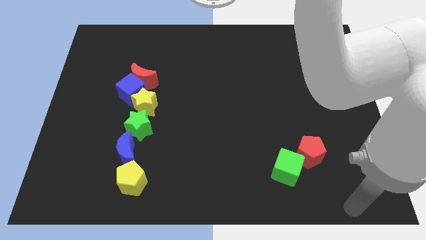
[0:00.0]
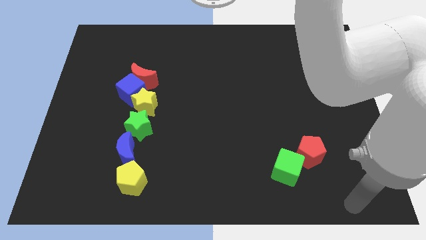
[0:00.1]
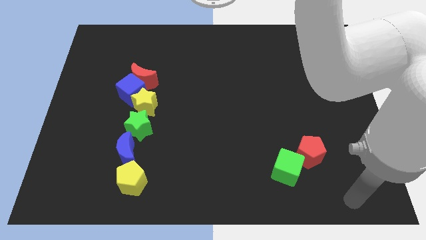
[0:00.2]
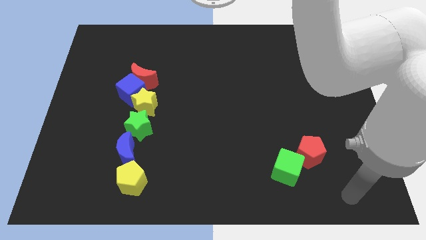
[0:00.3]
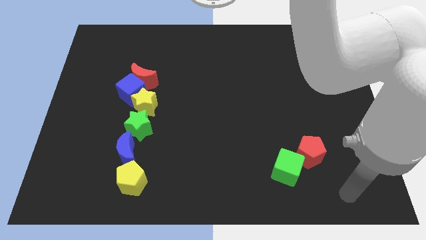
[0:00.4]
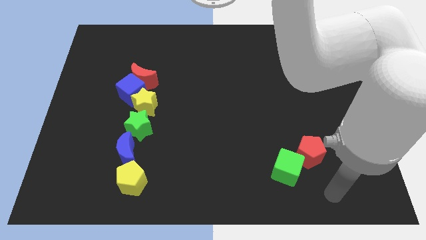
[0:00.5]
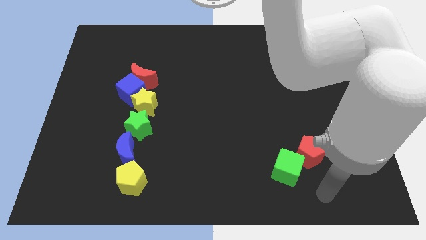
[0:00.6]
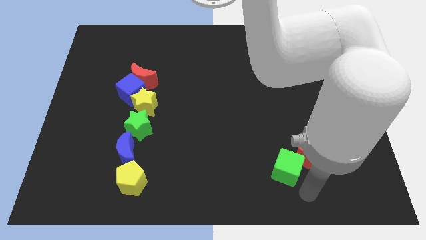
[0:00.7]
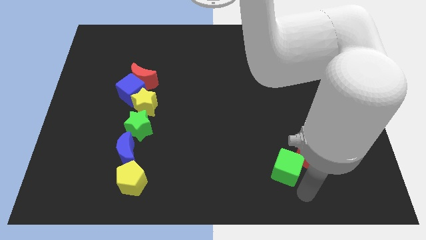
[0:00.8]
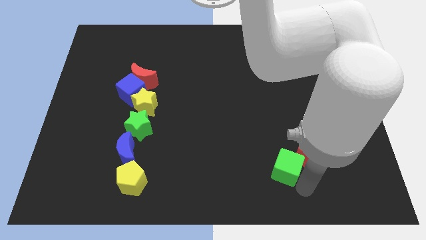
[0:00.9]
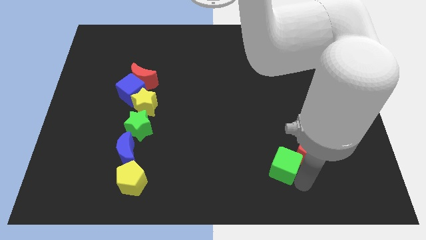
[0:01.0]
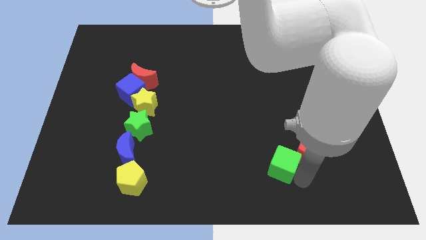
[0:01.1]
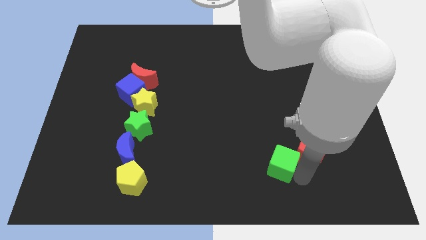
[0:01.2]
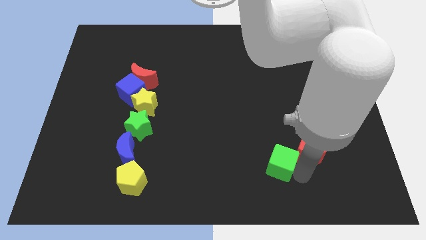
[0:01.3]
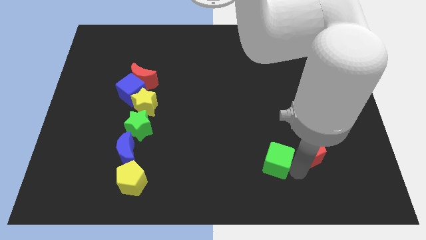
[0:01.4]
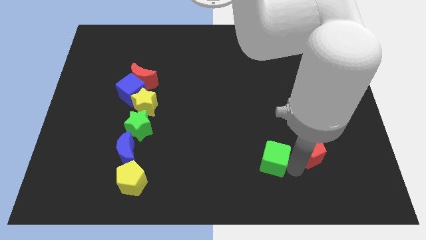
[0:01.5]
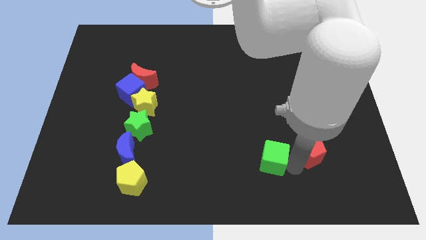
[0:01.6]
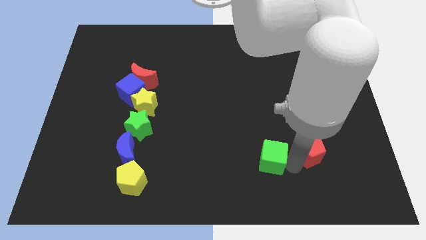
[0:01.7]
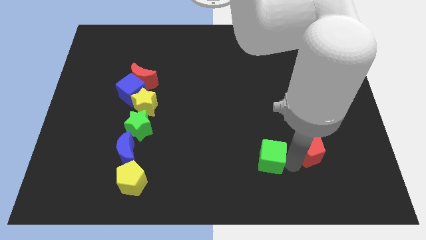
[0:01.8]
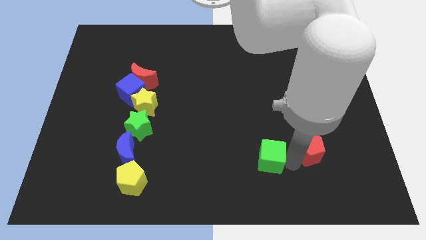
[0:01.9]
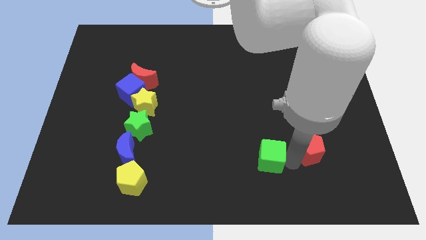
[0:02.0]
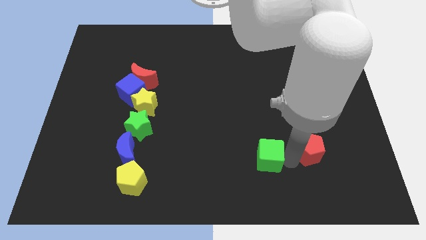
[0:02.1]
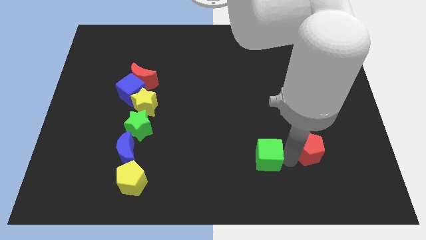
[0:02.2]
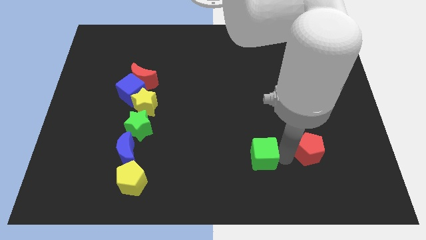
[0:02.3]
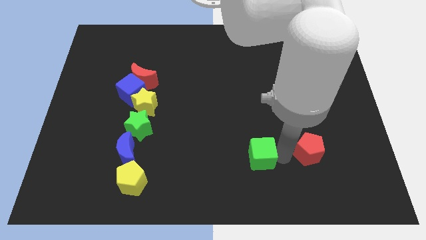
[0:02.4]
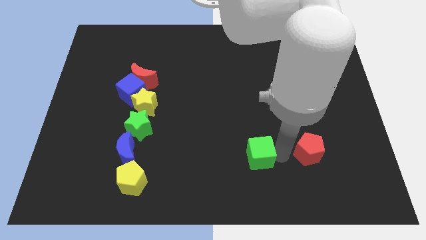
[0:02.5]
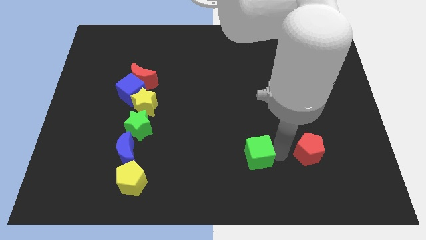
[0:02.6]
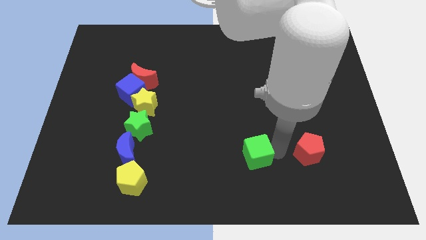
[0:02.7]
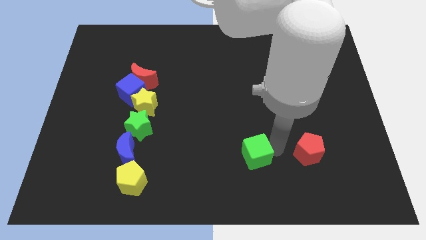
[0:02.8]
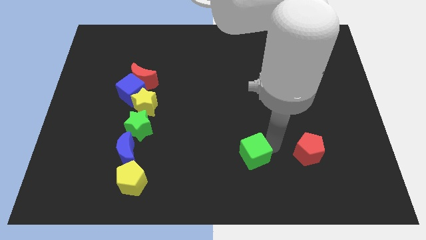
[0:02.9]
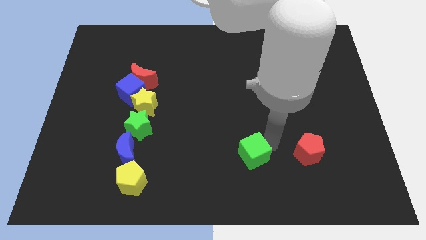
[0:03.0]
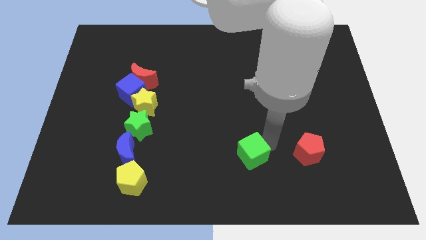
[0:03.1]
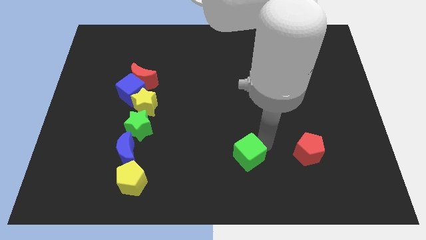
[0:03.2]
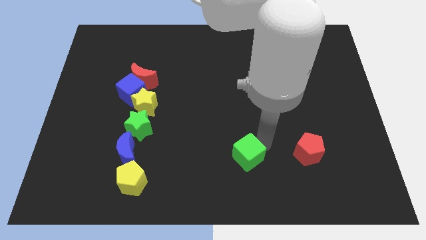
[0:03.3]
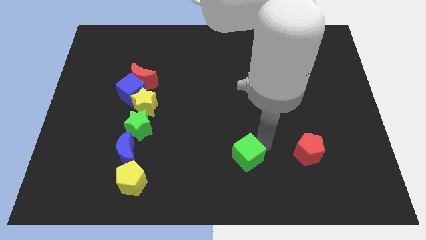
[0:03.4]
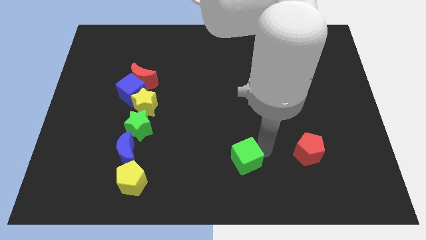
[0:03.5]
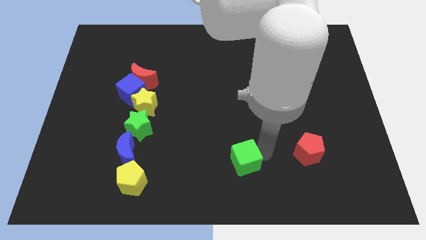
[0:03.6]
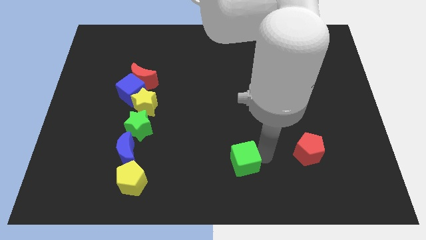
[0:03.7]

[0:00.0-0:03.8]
push the green cube to the parallel left of the red pentagon

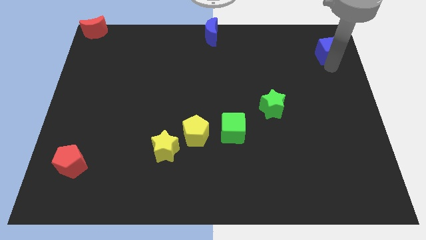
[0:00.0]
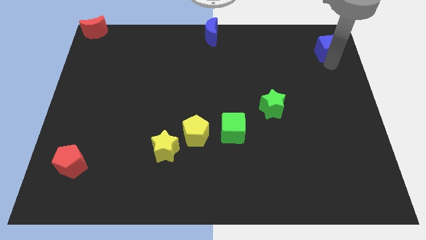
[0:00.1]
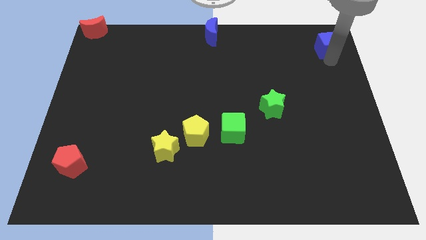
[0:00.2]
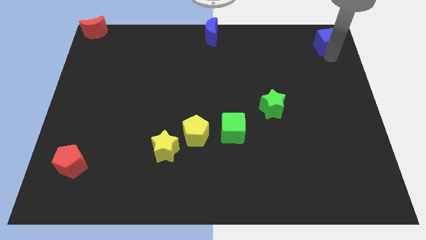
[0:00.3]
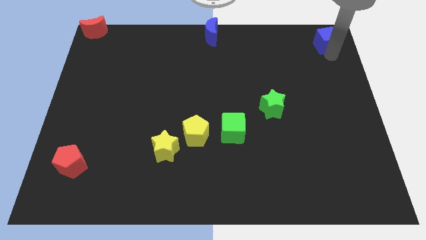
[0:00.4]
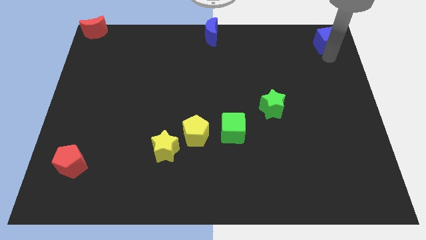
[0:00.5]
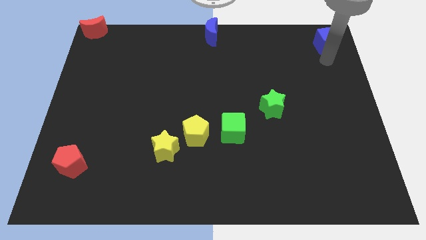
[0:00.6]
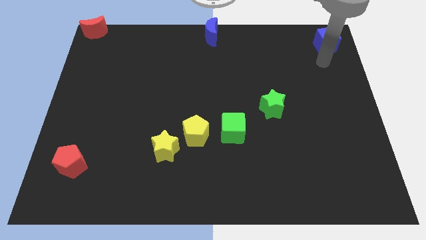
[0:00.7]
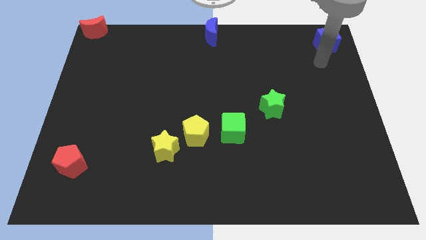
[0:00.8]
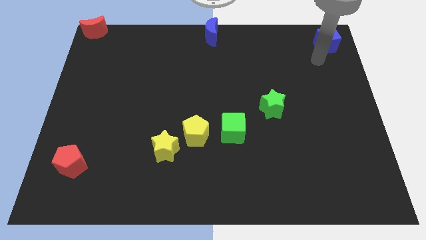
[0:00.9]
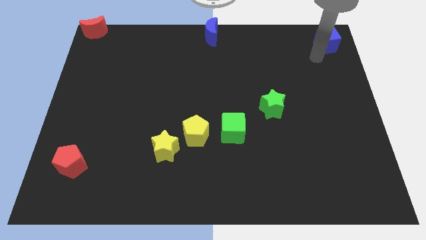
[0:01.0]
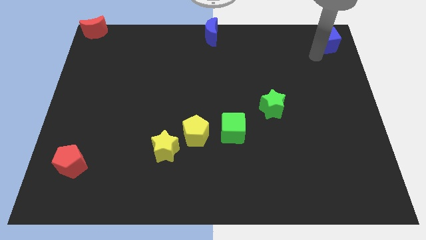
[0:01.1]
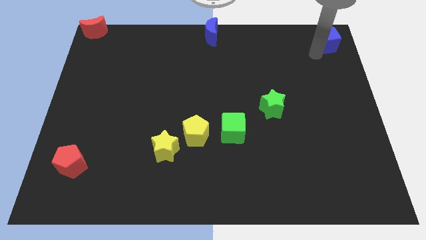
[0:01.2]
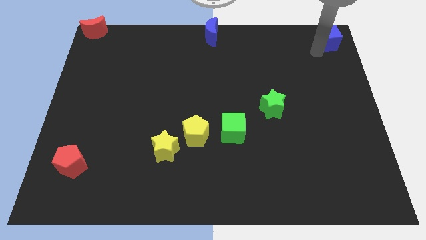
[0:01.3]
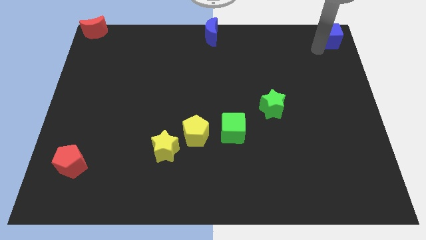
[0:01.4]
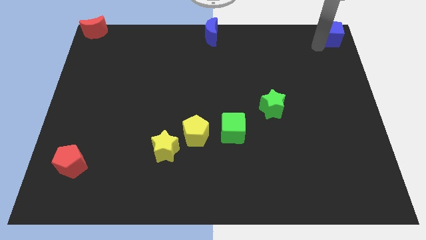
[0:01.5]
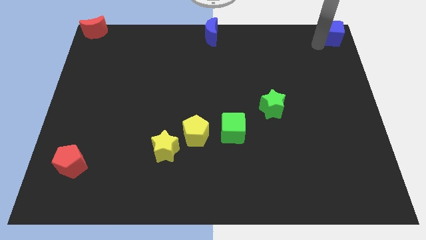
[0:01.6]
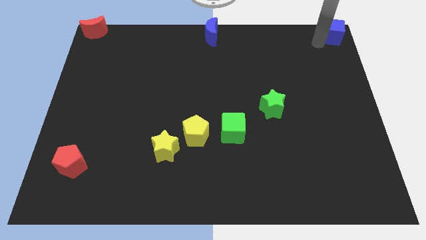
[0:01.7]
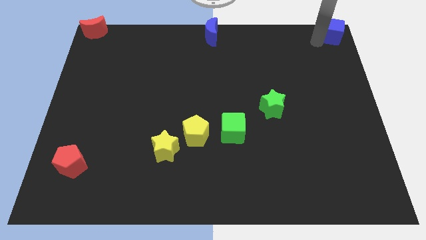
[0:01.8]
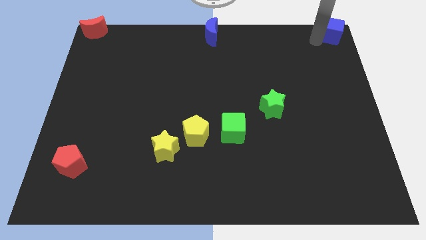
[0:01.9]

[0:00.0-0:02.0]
place the blue cube parallel right to the blue moon

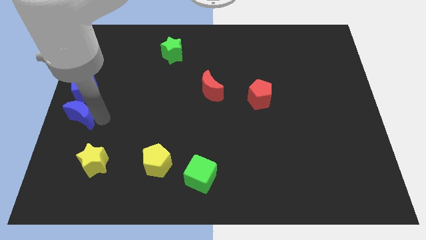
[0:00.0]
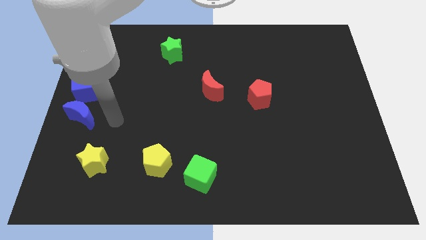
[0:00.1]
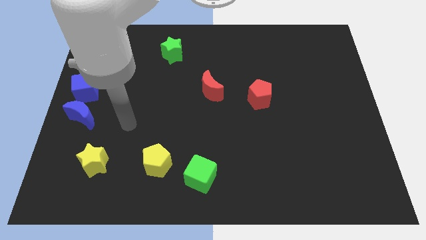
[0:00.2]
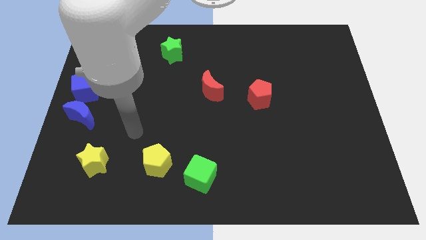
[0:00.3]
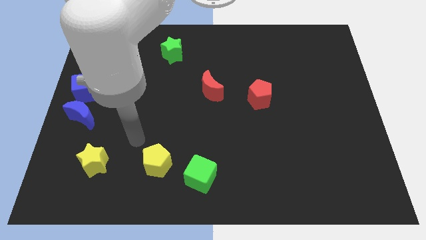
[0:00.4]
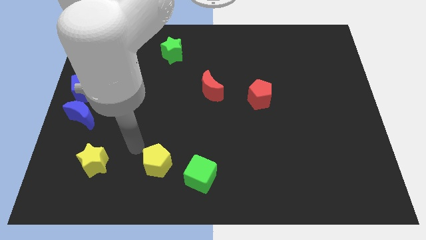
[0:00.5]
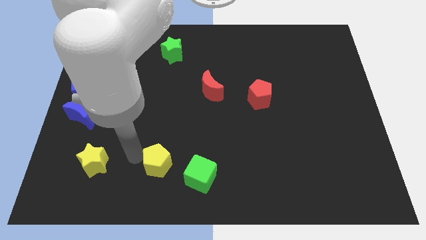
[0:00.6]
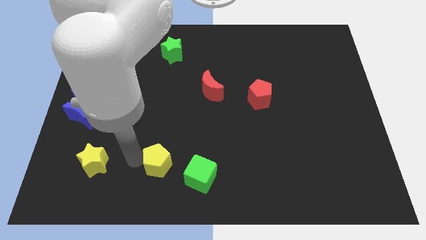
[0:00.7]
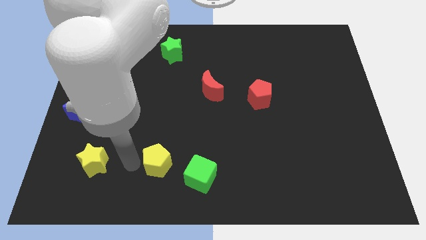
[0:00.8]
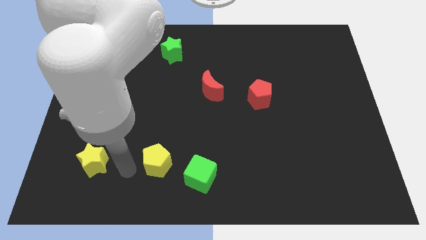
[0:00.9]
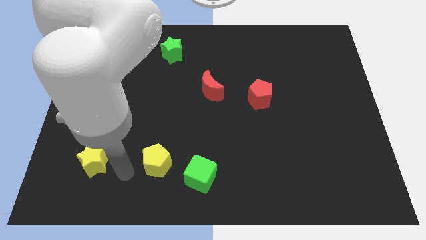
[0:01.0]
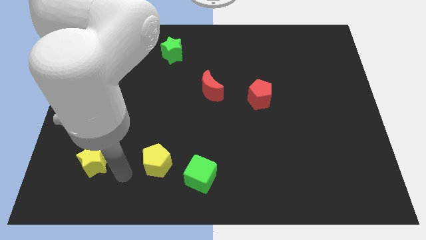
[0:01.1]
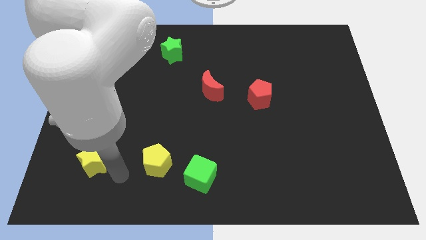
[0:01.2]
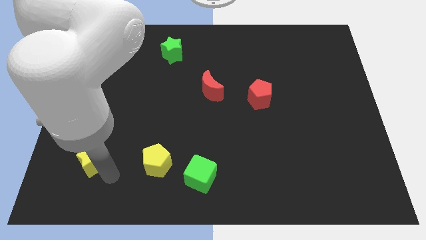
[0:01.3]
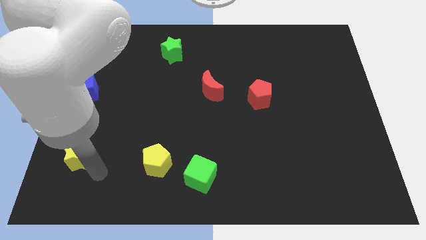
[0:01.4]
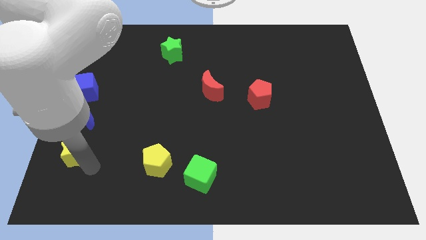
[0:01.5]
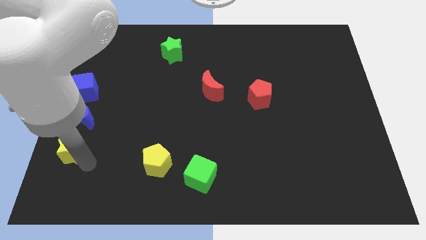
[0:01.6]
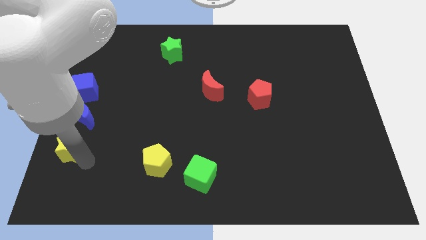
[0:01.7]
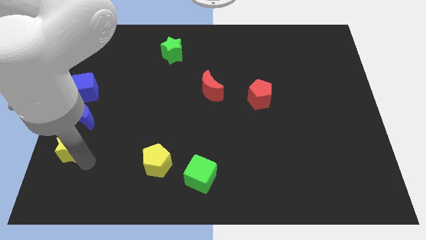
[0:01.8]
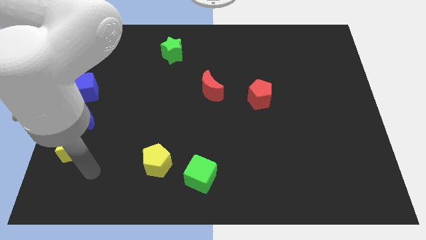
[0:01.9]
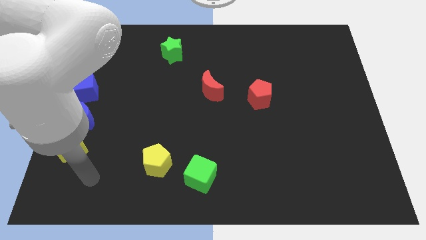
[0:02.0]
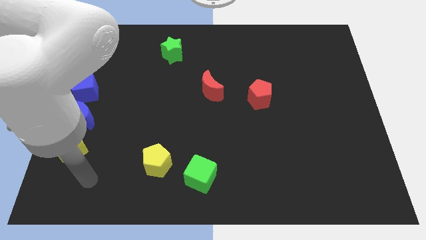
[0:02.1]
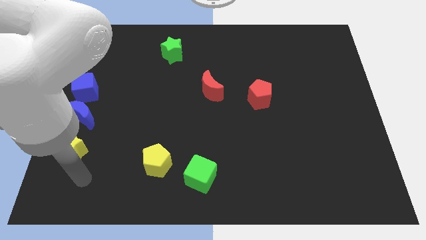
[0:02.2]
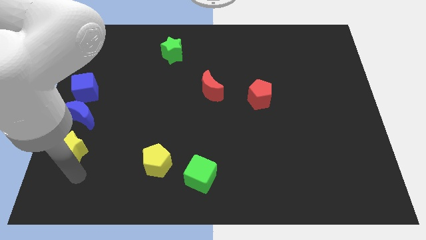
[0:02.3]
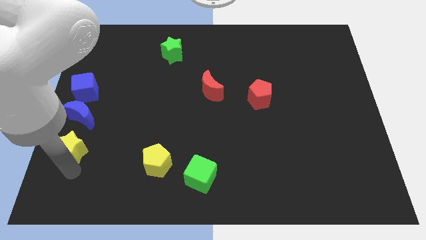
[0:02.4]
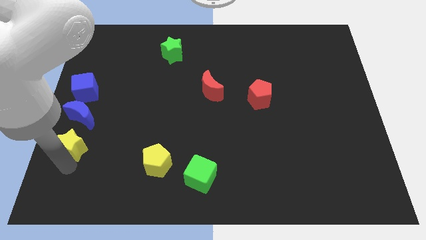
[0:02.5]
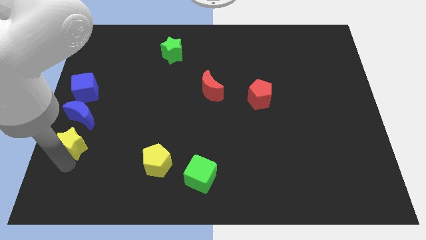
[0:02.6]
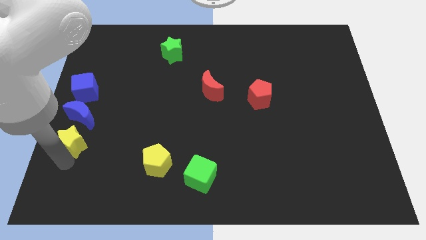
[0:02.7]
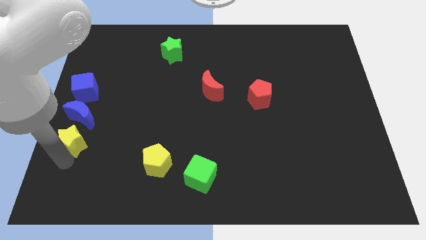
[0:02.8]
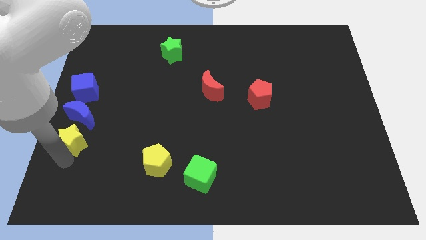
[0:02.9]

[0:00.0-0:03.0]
move yellow star to the center left

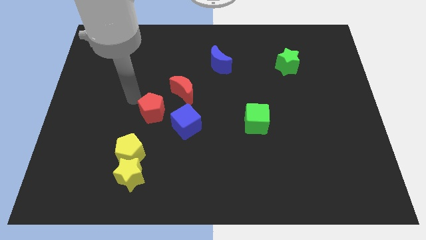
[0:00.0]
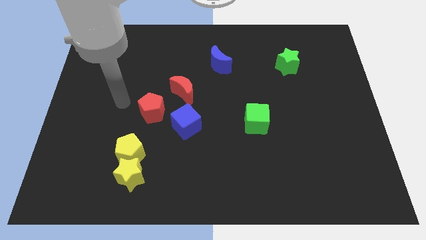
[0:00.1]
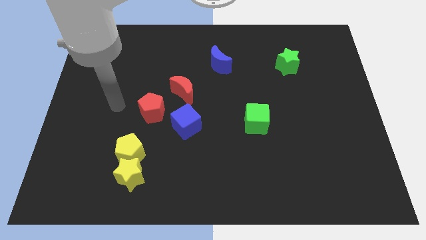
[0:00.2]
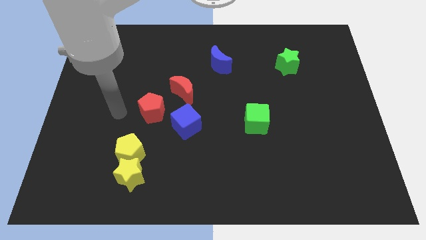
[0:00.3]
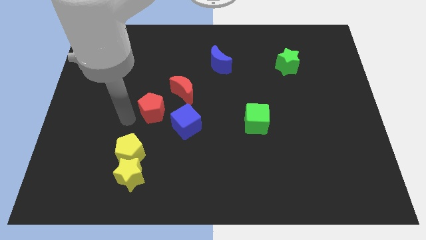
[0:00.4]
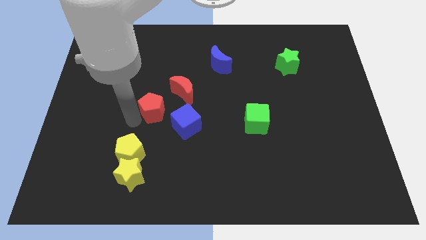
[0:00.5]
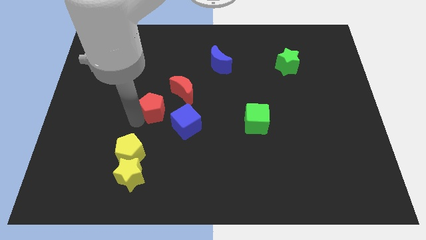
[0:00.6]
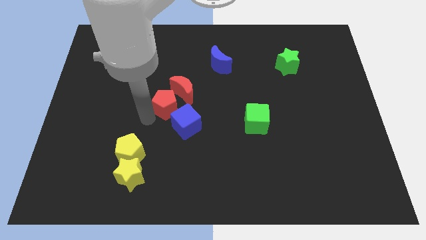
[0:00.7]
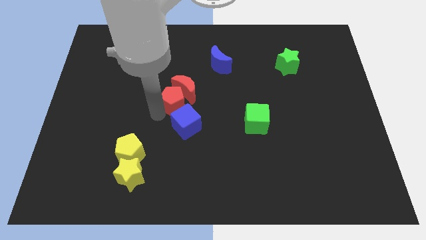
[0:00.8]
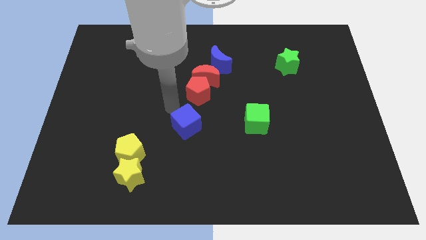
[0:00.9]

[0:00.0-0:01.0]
push the red pentagon along with red crescent diagonally
